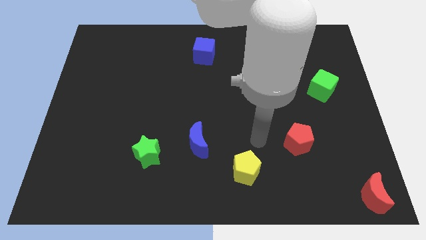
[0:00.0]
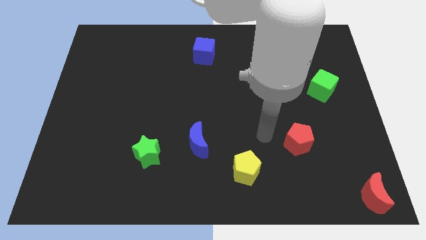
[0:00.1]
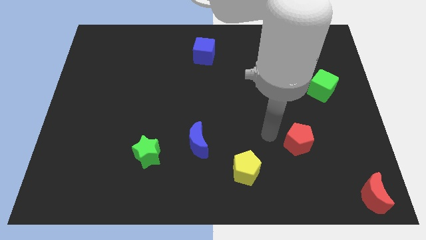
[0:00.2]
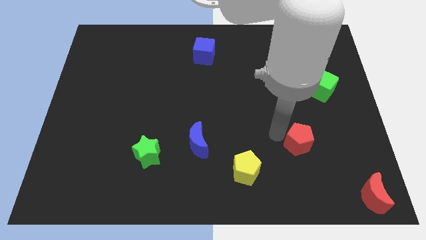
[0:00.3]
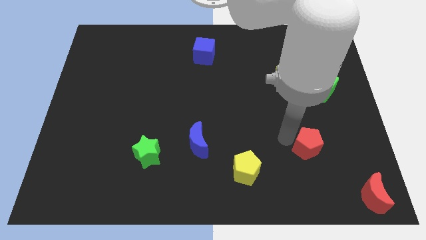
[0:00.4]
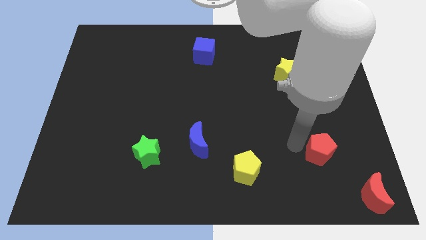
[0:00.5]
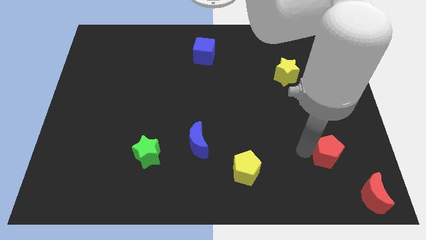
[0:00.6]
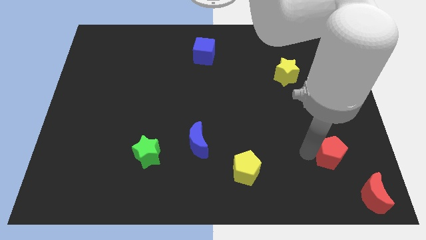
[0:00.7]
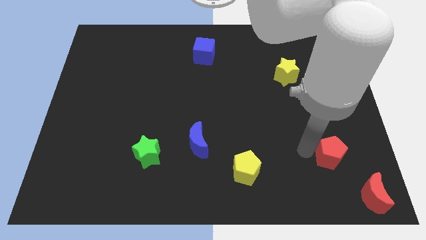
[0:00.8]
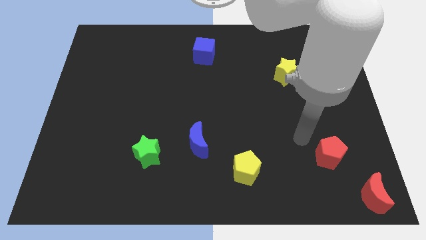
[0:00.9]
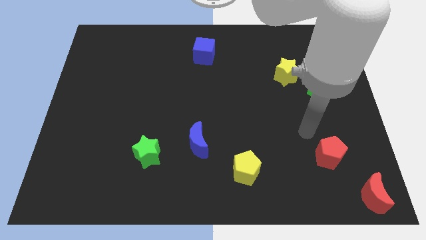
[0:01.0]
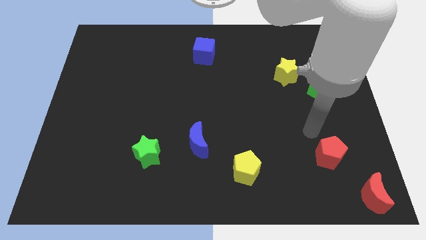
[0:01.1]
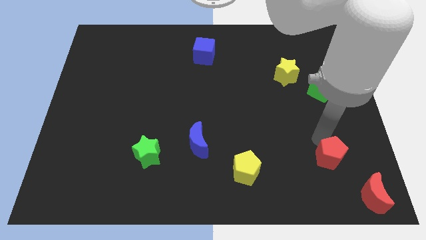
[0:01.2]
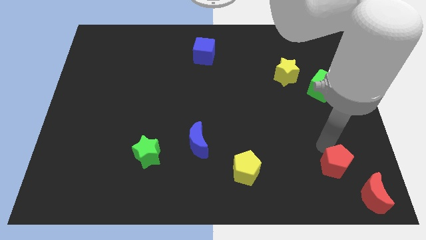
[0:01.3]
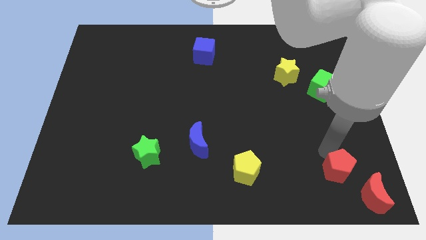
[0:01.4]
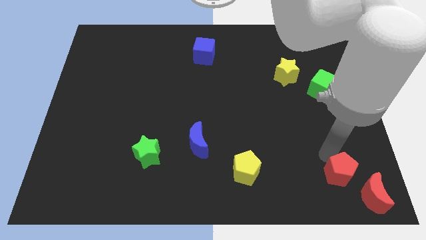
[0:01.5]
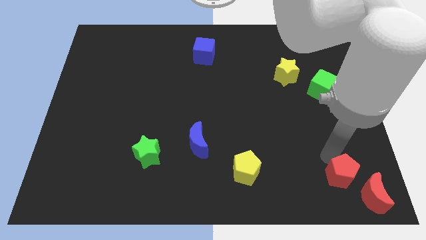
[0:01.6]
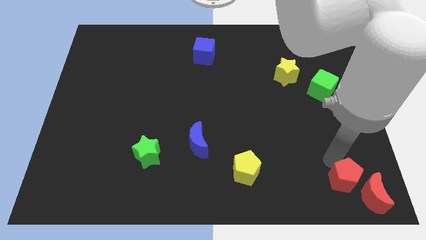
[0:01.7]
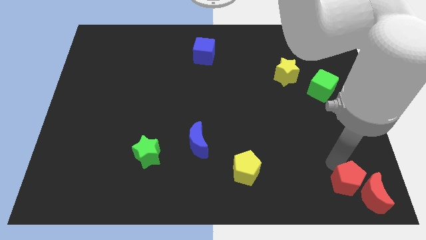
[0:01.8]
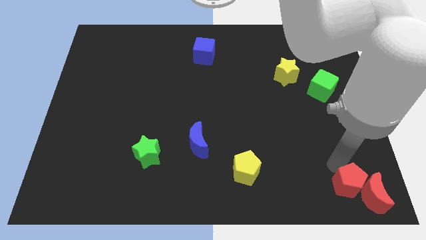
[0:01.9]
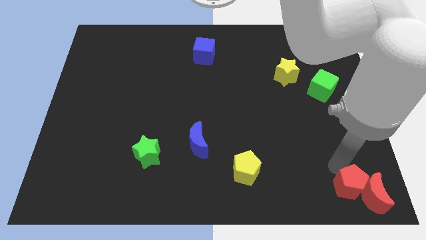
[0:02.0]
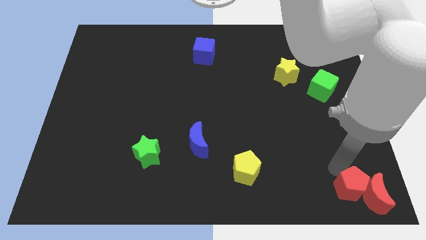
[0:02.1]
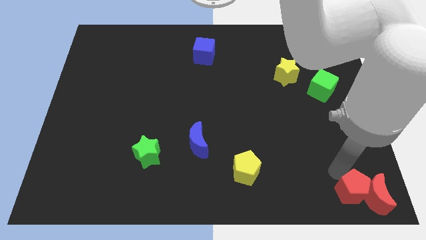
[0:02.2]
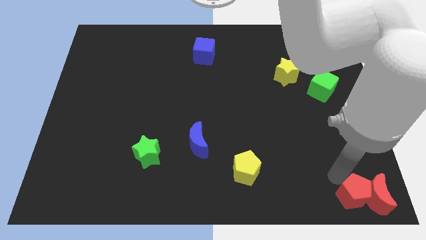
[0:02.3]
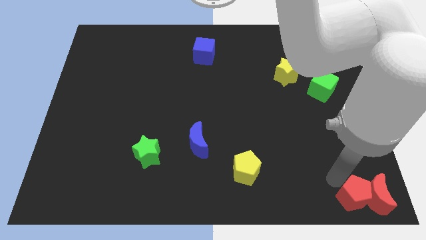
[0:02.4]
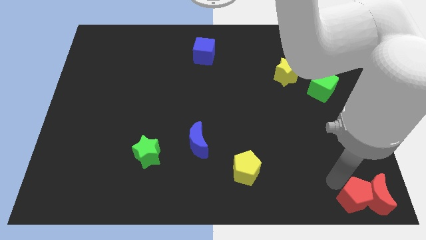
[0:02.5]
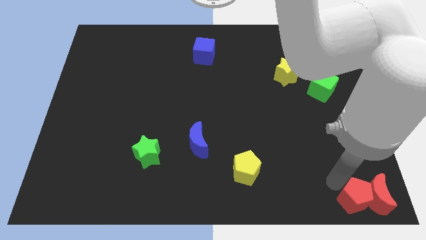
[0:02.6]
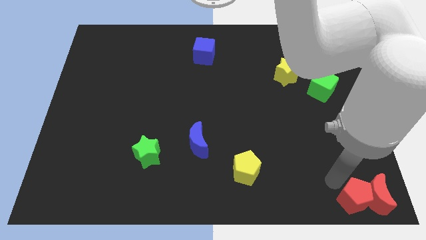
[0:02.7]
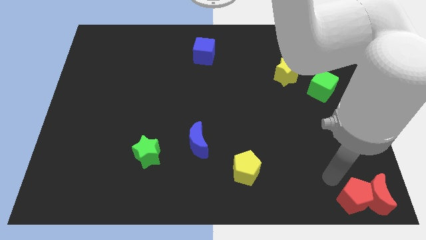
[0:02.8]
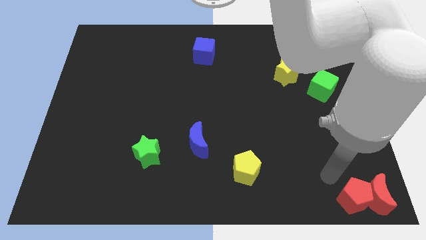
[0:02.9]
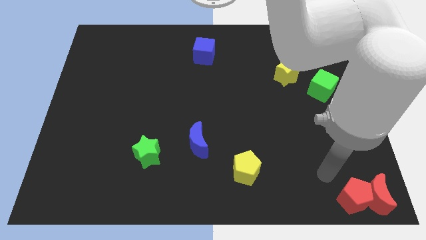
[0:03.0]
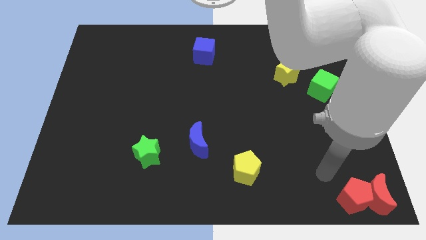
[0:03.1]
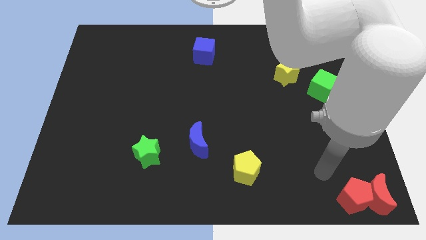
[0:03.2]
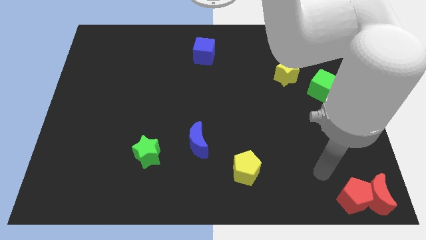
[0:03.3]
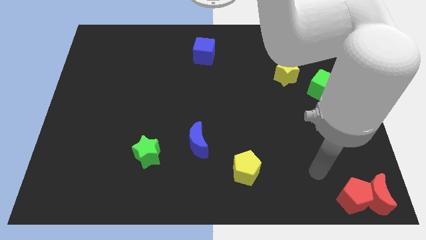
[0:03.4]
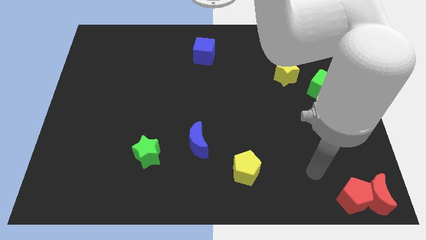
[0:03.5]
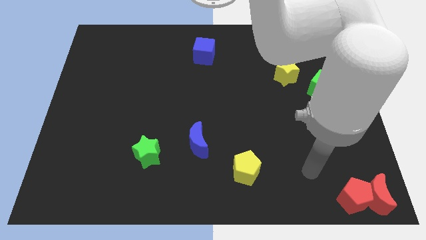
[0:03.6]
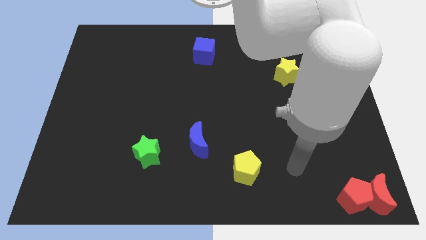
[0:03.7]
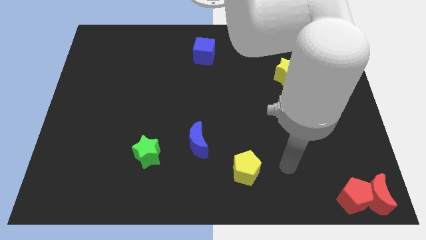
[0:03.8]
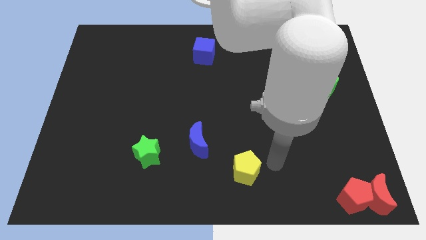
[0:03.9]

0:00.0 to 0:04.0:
move the red pentagon to the left of the red crescent

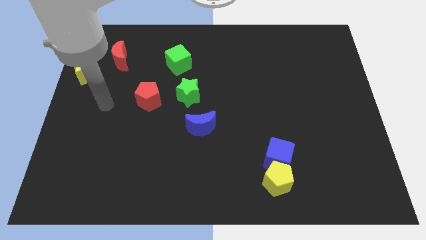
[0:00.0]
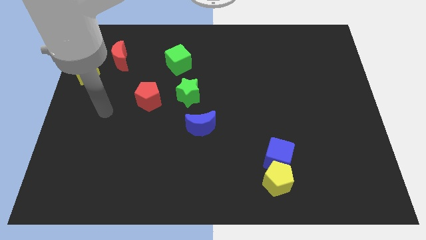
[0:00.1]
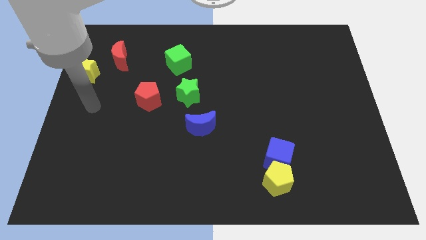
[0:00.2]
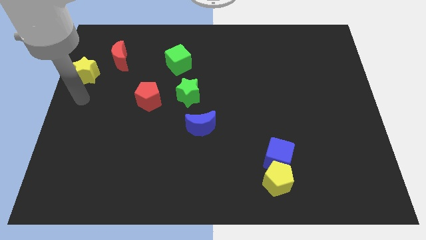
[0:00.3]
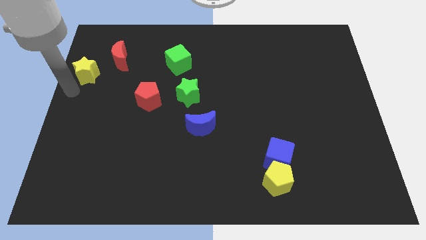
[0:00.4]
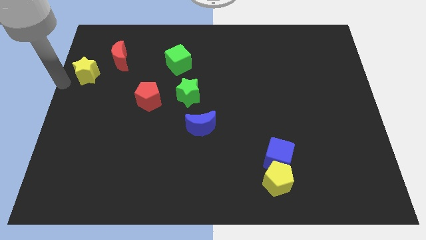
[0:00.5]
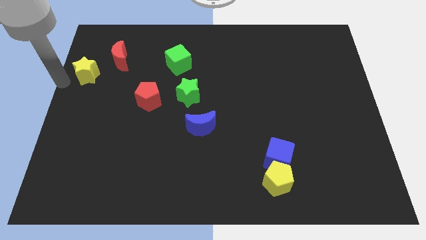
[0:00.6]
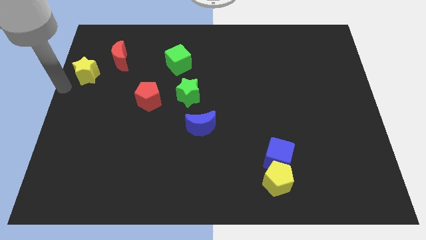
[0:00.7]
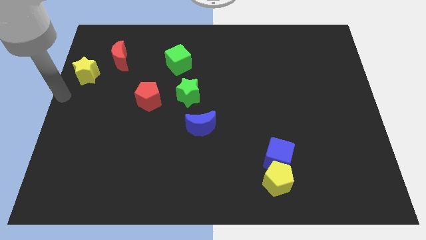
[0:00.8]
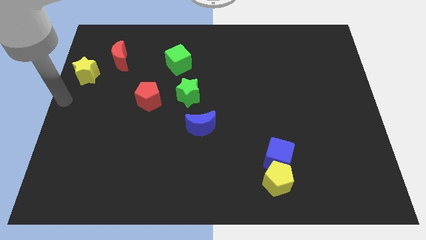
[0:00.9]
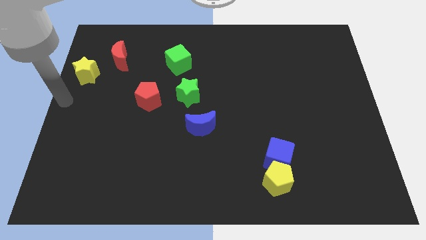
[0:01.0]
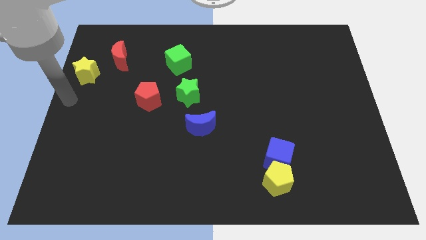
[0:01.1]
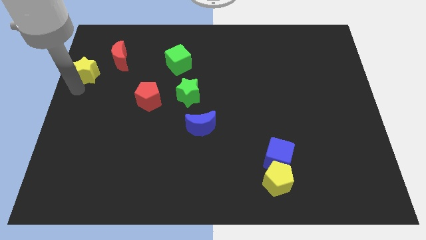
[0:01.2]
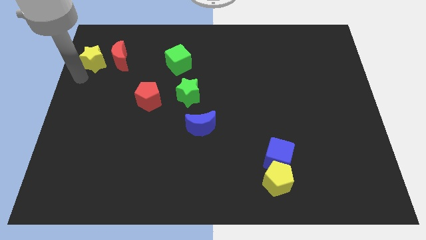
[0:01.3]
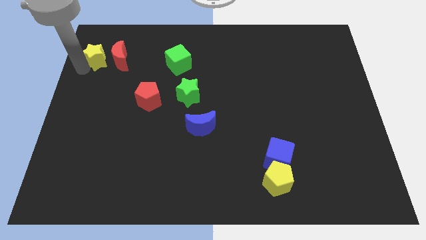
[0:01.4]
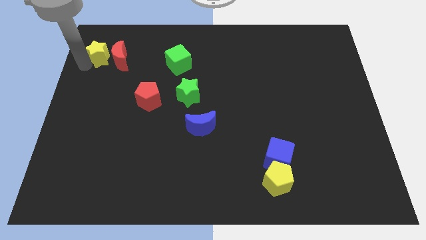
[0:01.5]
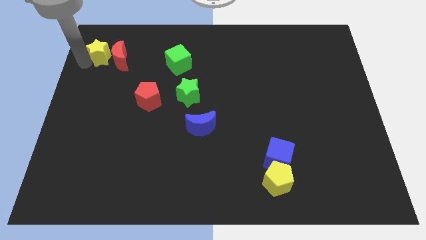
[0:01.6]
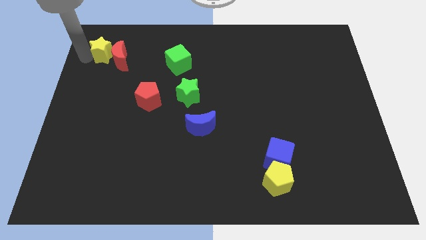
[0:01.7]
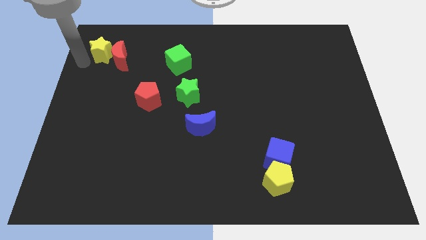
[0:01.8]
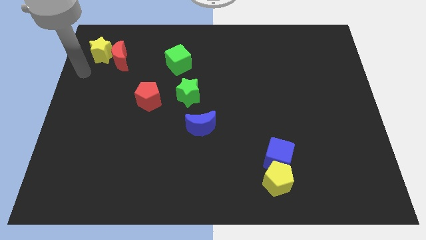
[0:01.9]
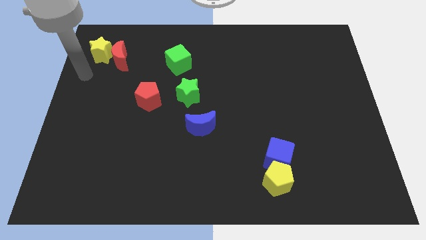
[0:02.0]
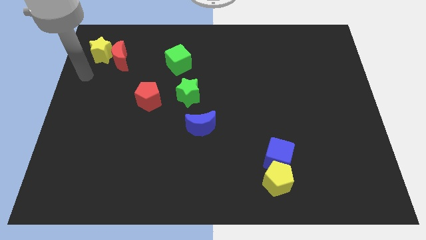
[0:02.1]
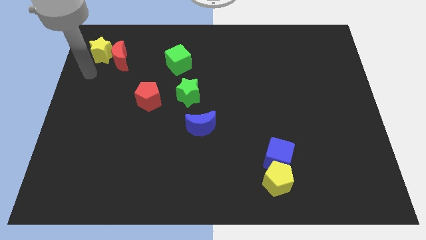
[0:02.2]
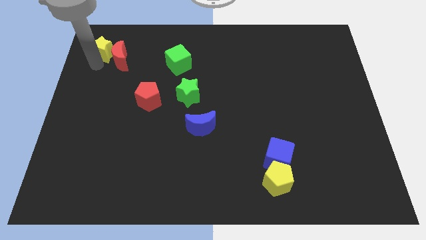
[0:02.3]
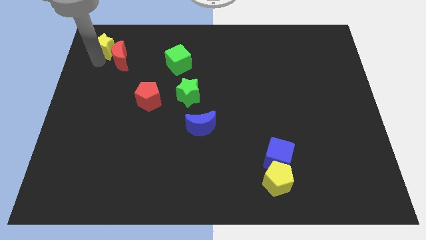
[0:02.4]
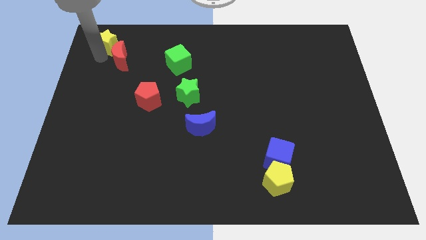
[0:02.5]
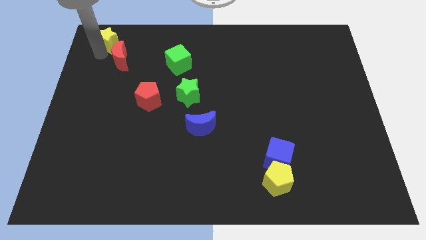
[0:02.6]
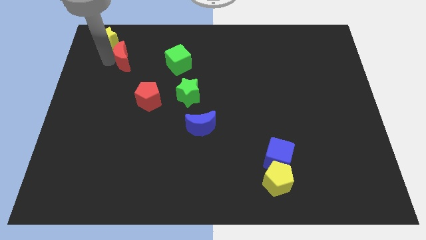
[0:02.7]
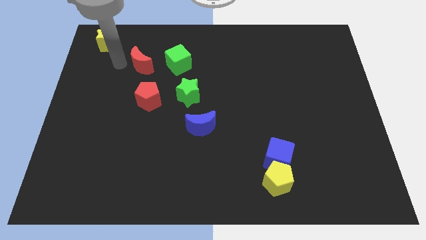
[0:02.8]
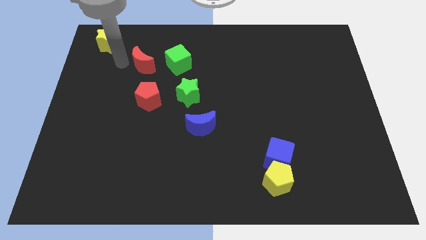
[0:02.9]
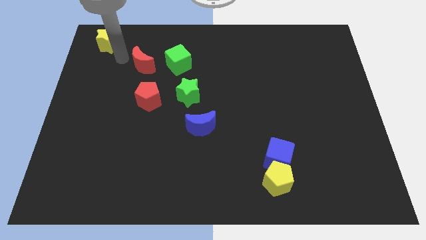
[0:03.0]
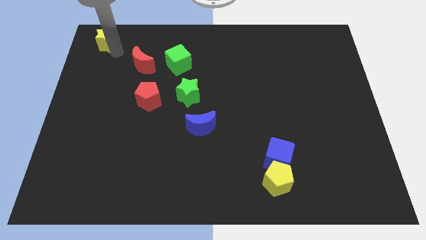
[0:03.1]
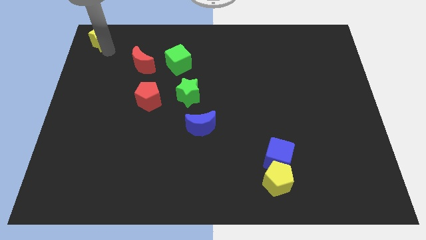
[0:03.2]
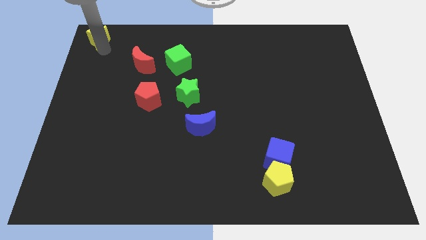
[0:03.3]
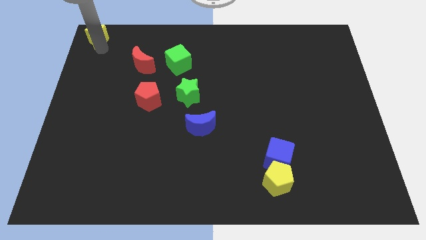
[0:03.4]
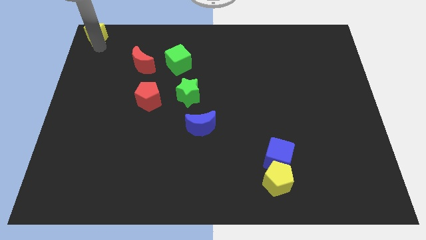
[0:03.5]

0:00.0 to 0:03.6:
place the yellow star at the top left corner of the board

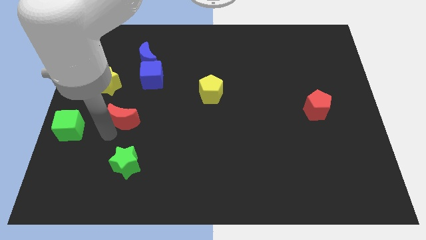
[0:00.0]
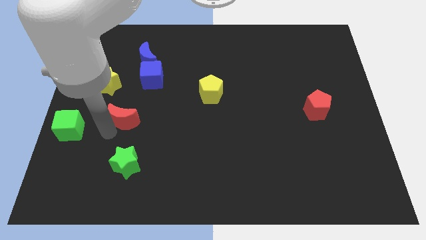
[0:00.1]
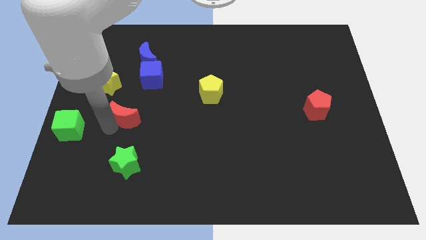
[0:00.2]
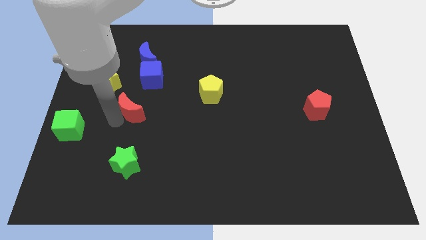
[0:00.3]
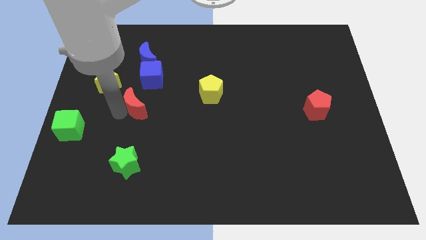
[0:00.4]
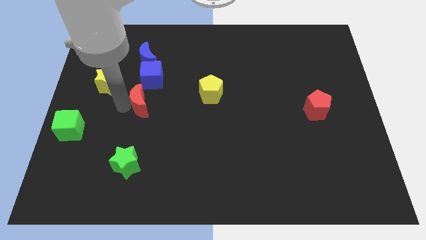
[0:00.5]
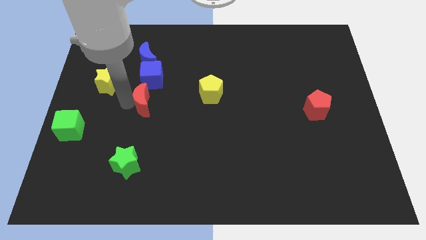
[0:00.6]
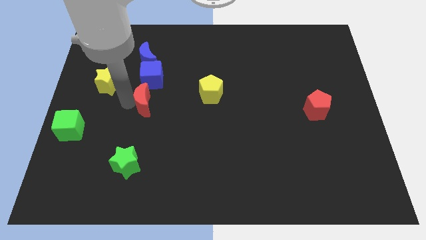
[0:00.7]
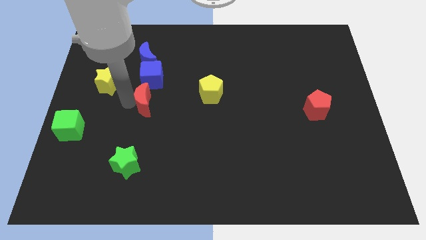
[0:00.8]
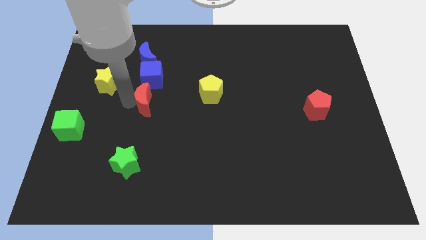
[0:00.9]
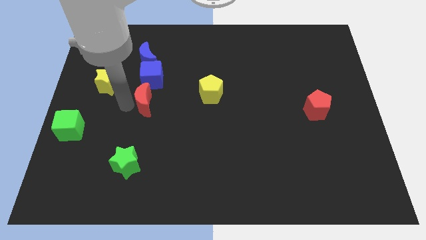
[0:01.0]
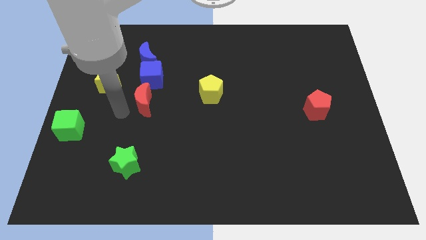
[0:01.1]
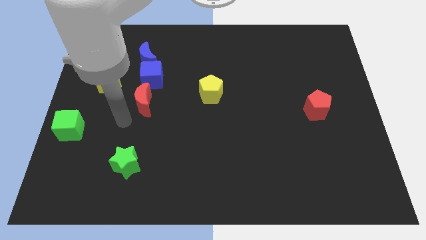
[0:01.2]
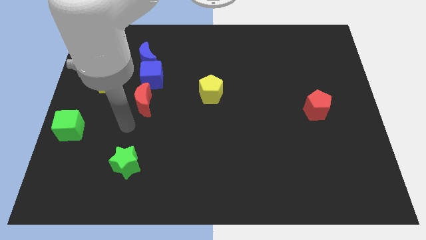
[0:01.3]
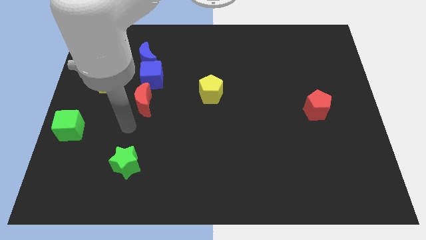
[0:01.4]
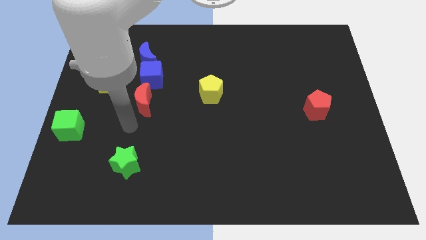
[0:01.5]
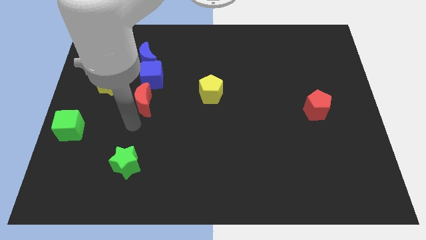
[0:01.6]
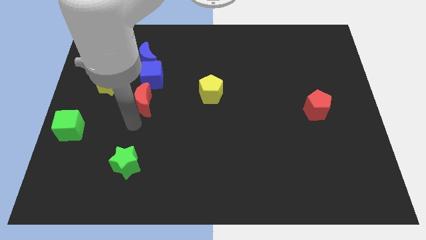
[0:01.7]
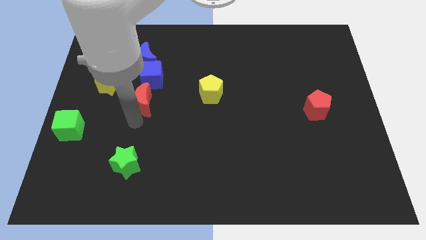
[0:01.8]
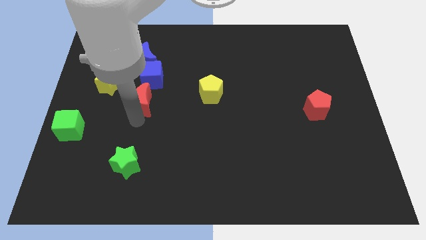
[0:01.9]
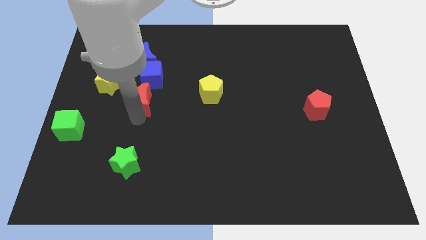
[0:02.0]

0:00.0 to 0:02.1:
place the red crescent below the blue cube
